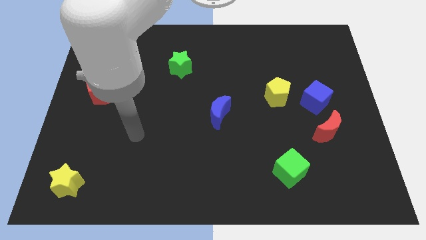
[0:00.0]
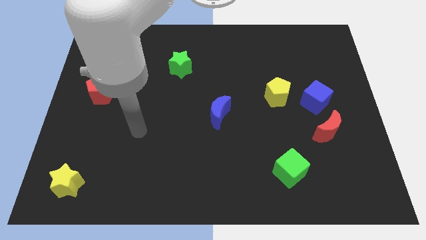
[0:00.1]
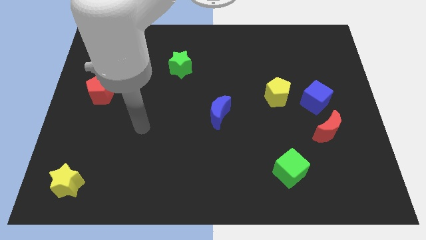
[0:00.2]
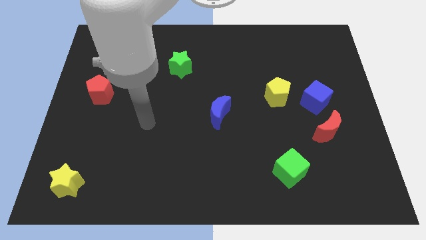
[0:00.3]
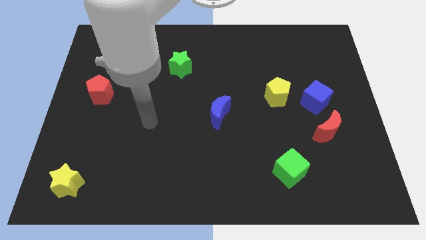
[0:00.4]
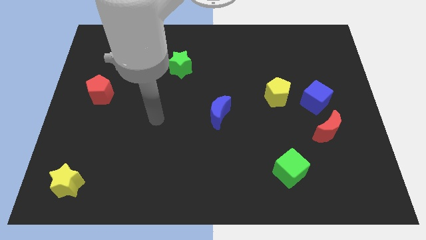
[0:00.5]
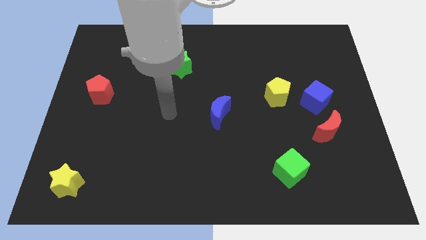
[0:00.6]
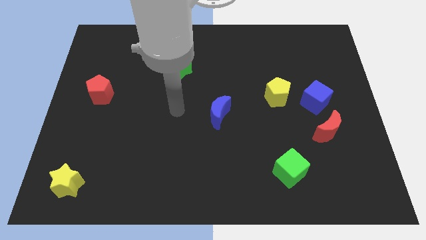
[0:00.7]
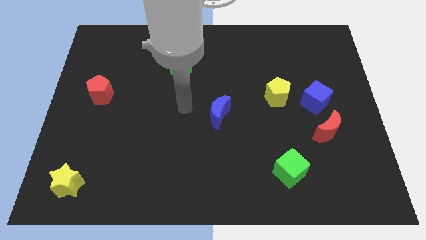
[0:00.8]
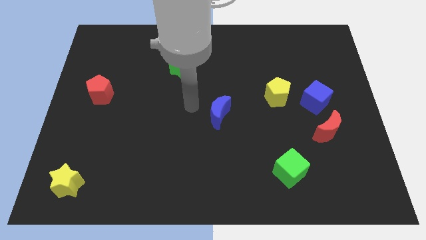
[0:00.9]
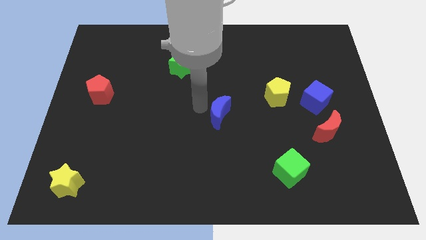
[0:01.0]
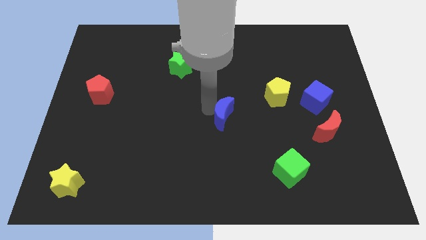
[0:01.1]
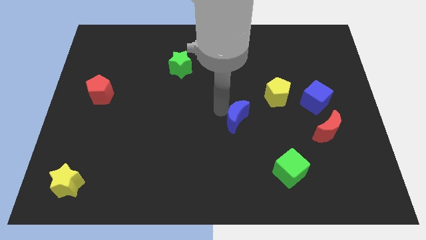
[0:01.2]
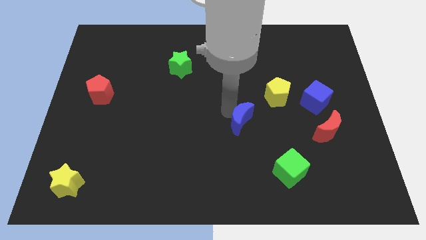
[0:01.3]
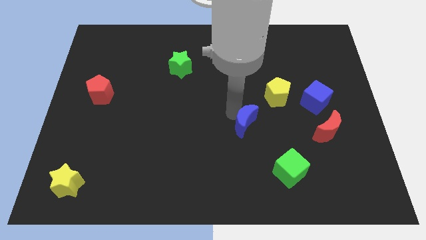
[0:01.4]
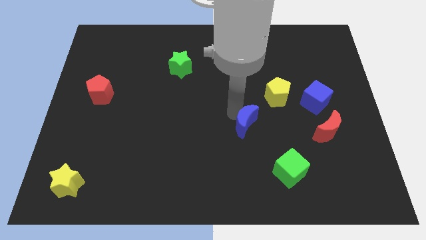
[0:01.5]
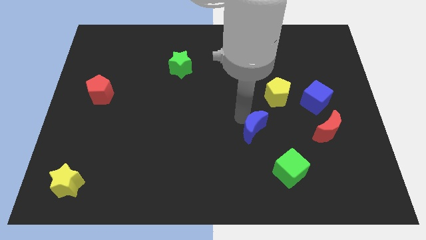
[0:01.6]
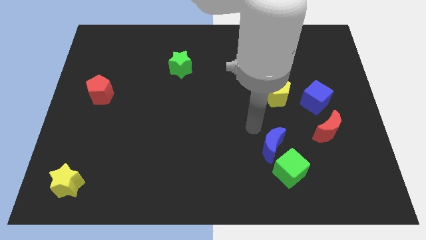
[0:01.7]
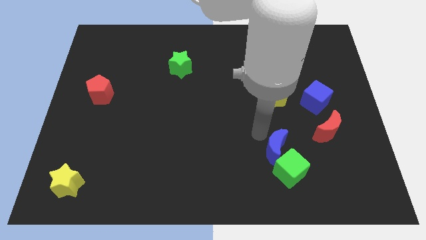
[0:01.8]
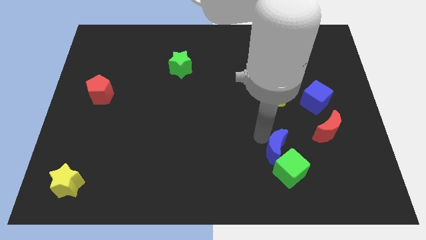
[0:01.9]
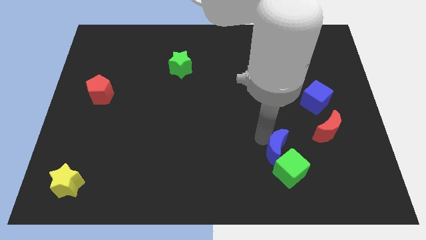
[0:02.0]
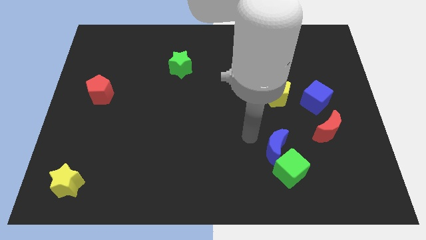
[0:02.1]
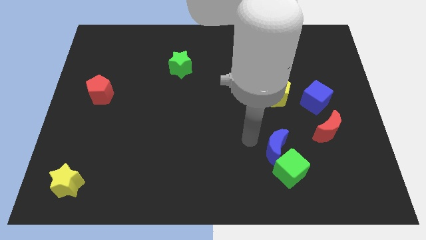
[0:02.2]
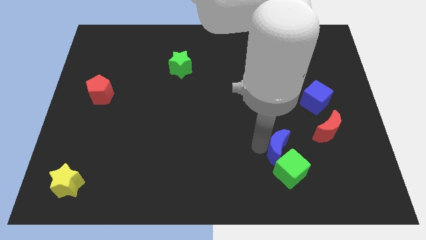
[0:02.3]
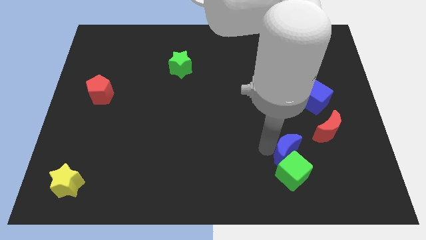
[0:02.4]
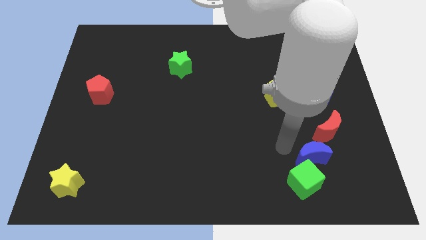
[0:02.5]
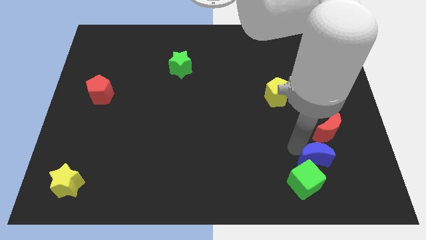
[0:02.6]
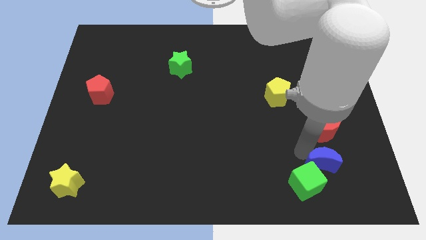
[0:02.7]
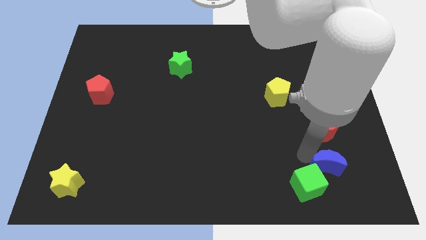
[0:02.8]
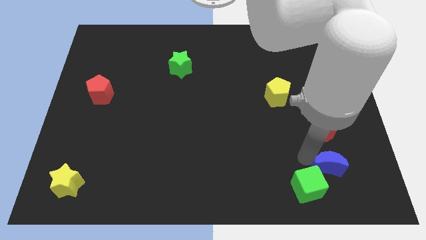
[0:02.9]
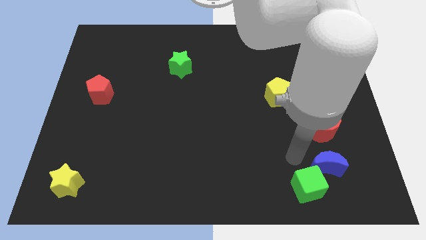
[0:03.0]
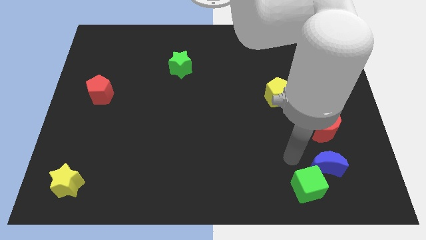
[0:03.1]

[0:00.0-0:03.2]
push the blue moon into the green cube

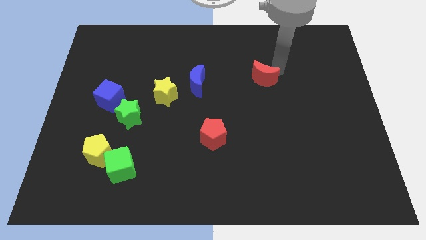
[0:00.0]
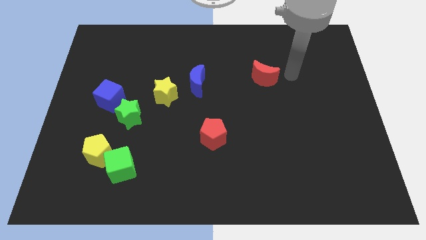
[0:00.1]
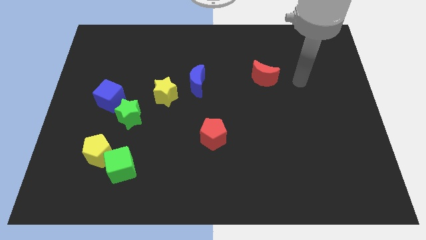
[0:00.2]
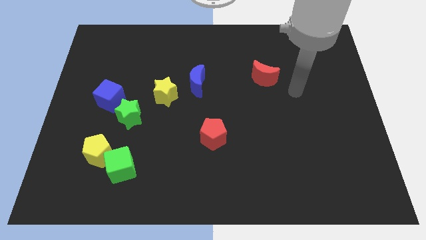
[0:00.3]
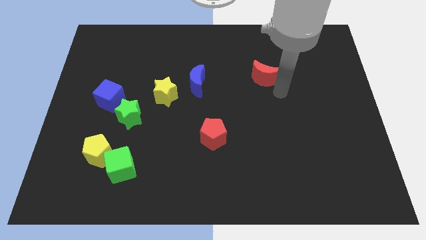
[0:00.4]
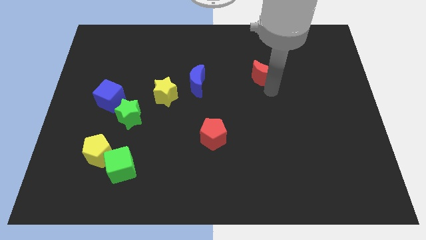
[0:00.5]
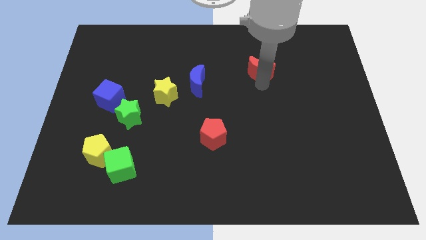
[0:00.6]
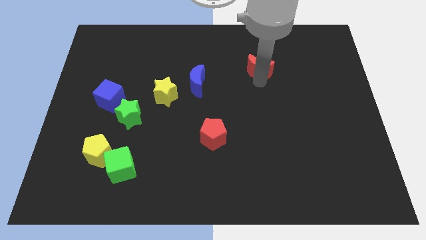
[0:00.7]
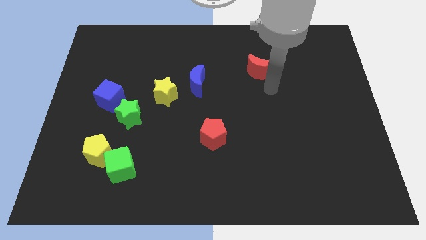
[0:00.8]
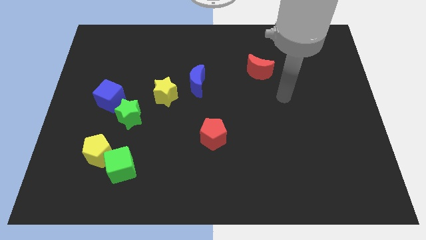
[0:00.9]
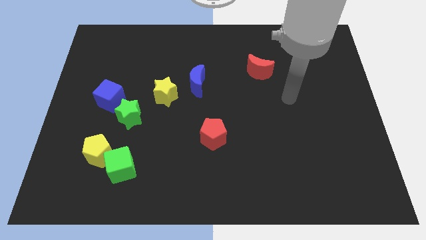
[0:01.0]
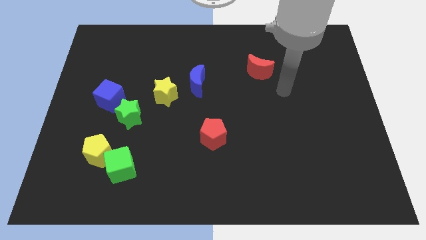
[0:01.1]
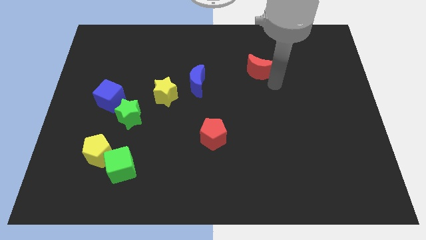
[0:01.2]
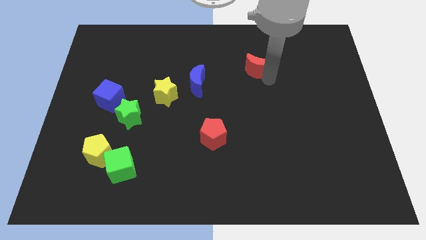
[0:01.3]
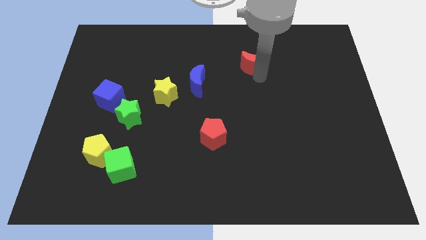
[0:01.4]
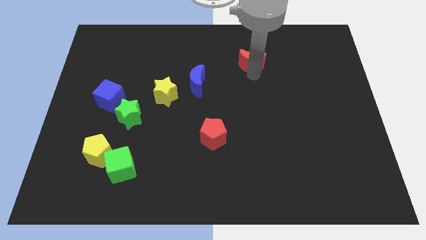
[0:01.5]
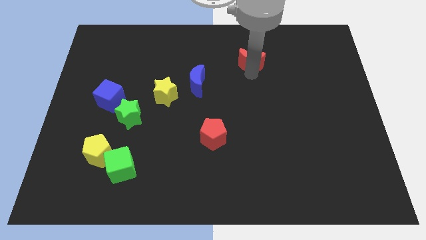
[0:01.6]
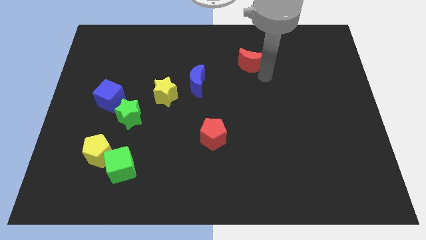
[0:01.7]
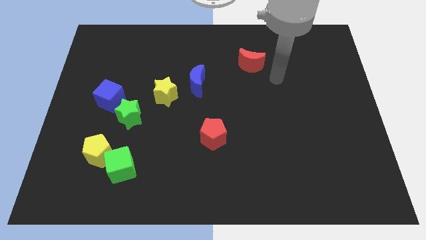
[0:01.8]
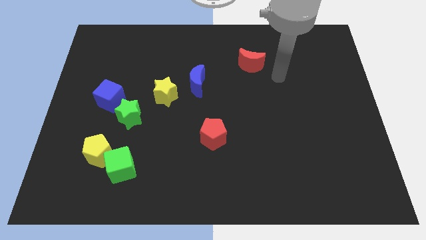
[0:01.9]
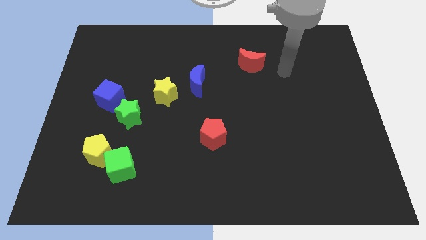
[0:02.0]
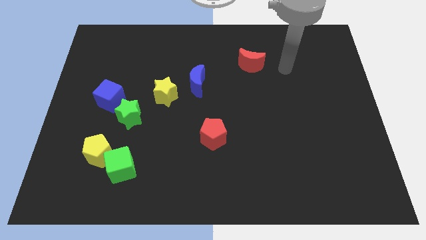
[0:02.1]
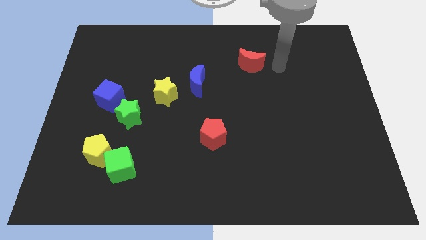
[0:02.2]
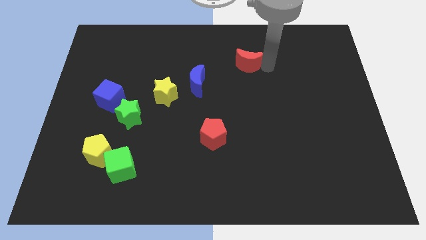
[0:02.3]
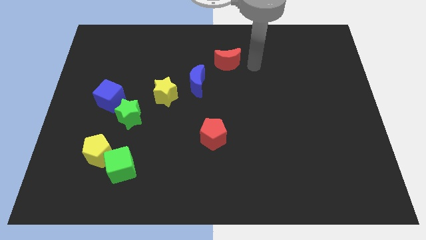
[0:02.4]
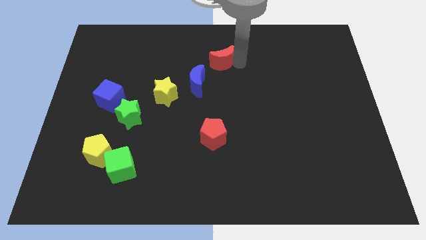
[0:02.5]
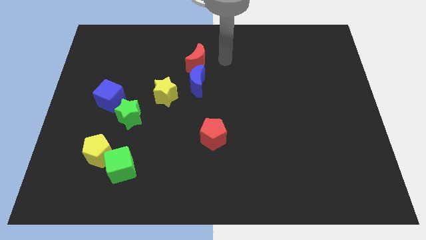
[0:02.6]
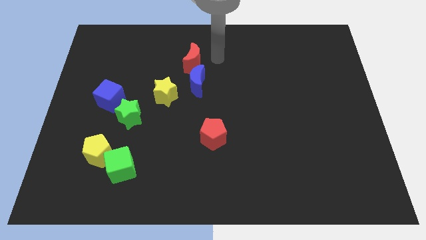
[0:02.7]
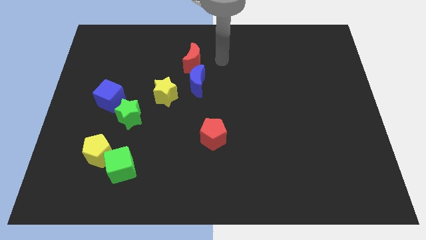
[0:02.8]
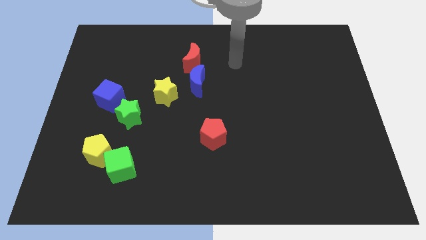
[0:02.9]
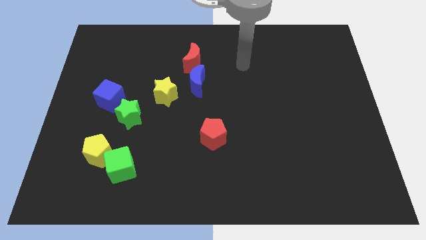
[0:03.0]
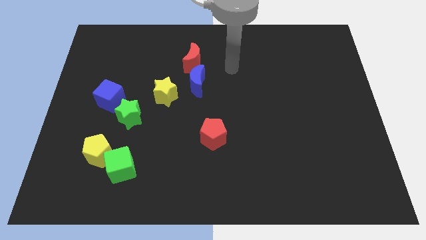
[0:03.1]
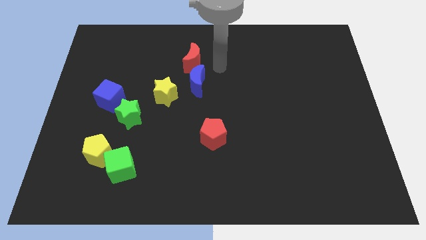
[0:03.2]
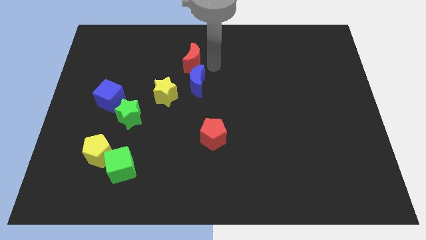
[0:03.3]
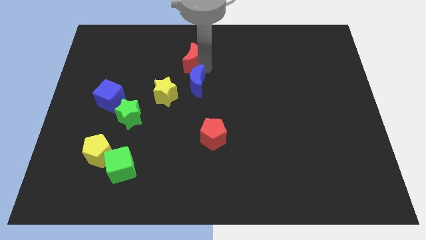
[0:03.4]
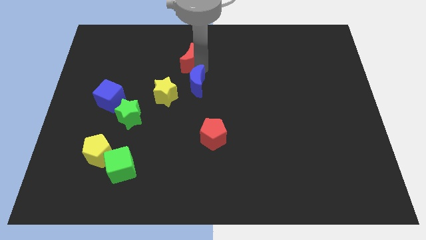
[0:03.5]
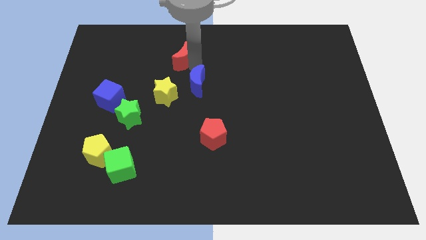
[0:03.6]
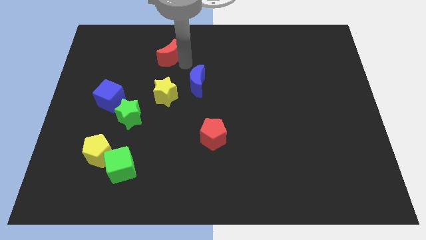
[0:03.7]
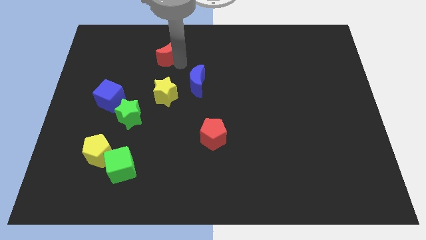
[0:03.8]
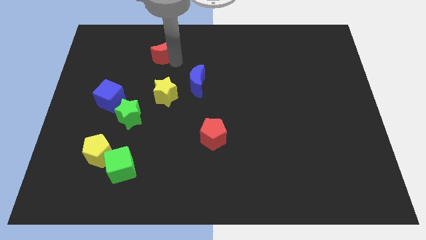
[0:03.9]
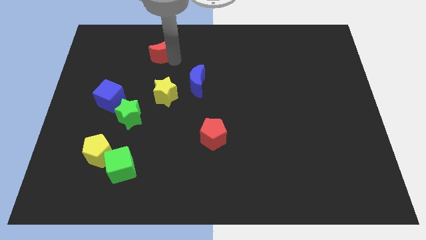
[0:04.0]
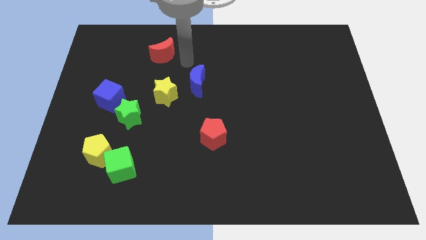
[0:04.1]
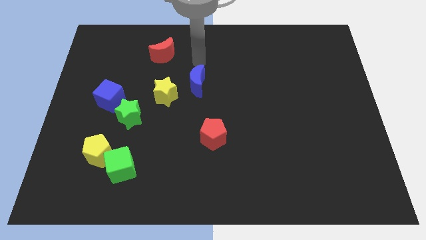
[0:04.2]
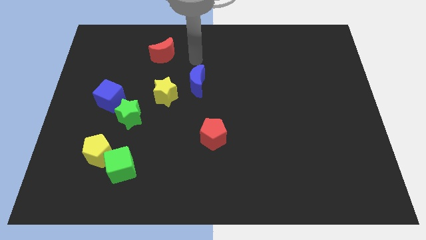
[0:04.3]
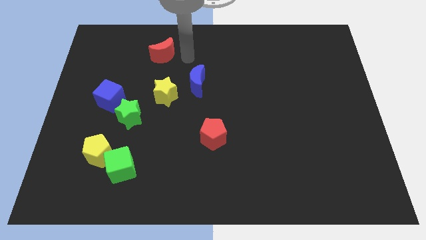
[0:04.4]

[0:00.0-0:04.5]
place the red moon above the yellow star

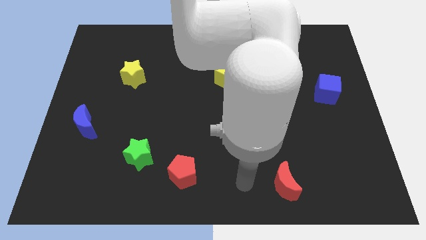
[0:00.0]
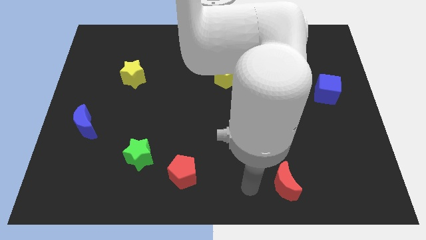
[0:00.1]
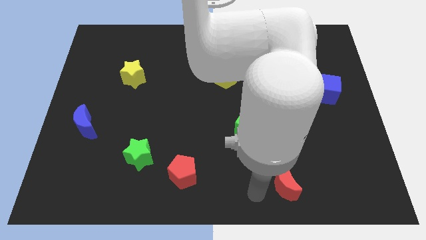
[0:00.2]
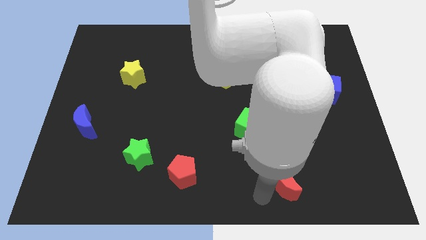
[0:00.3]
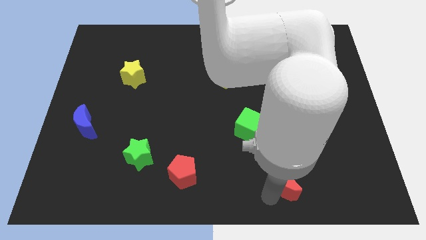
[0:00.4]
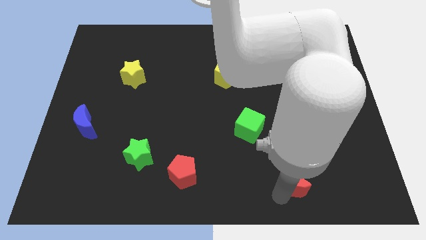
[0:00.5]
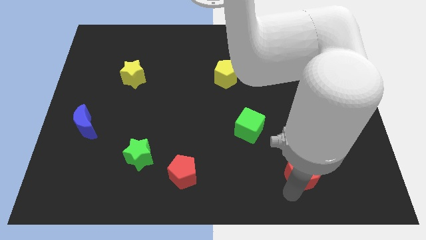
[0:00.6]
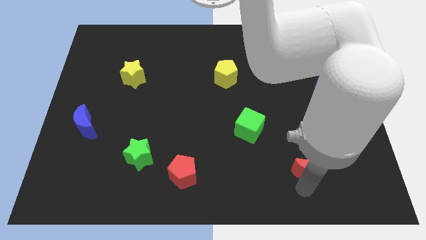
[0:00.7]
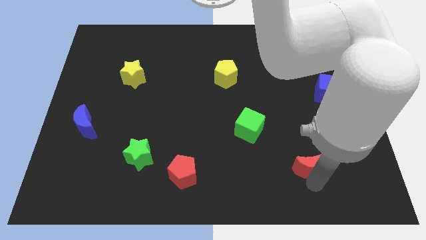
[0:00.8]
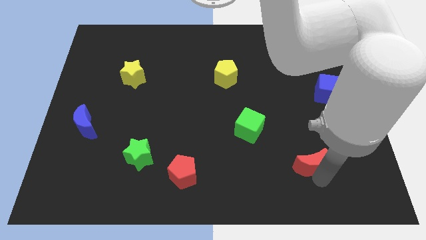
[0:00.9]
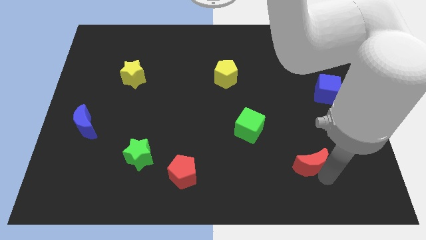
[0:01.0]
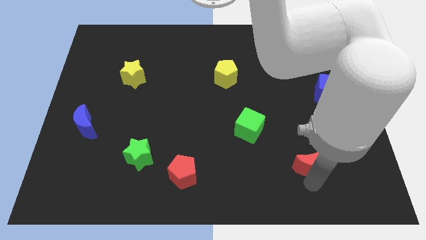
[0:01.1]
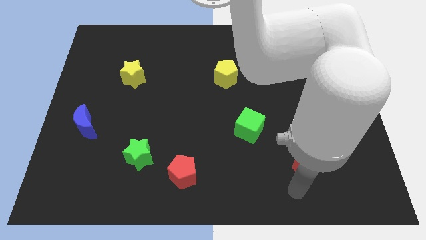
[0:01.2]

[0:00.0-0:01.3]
slide the red crescent horizontally to the right side of the red pentagon
